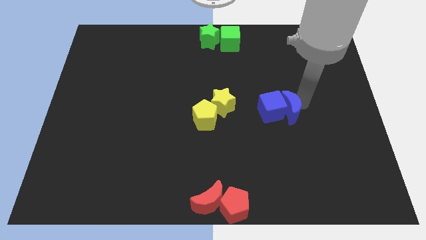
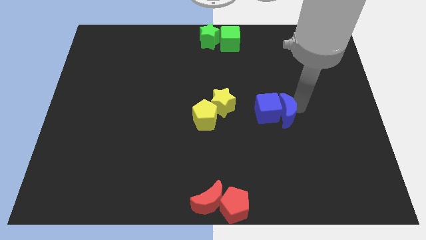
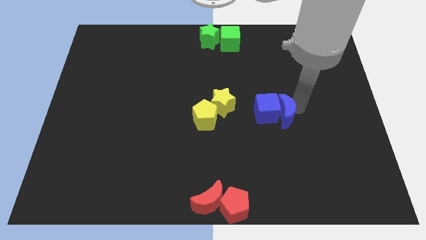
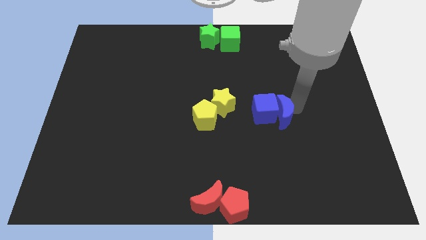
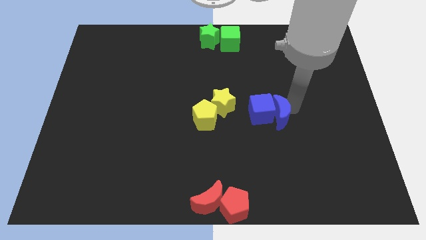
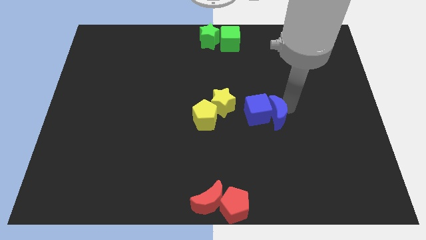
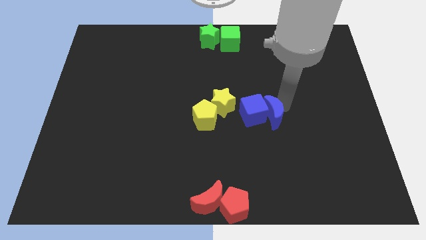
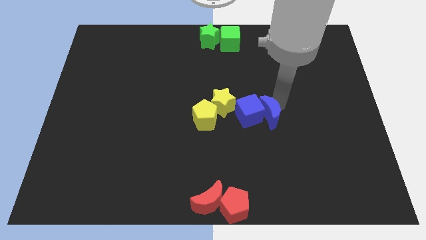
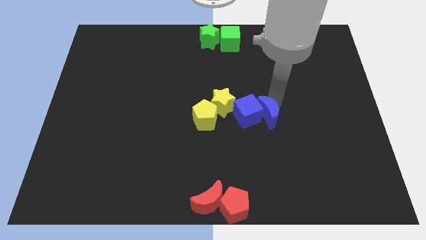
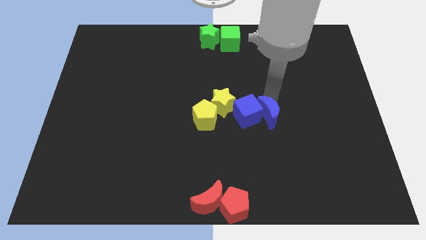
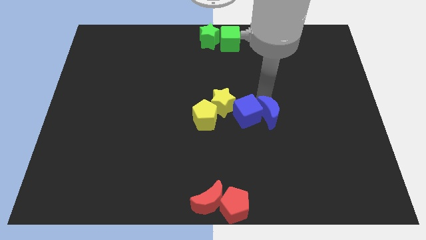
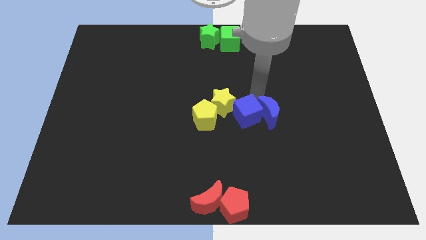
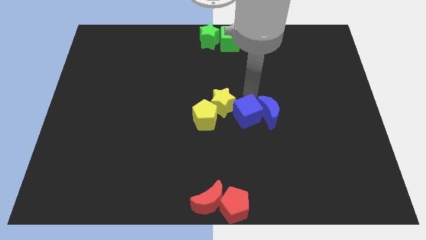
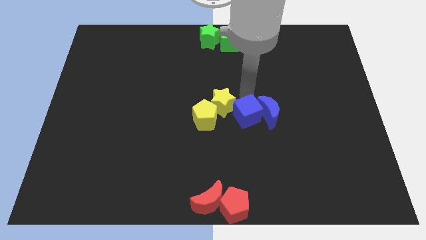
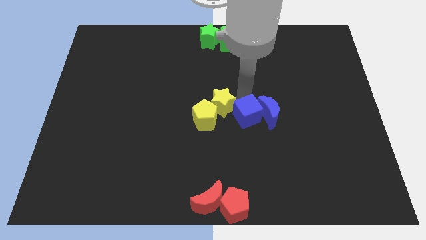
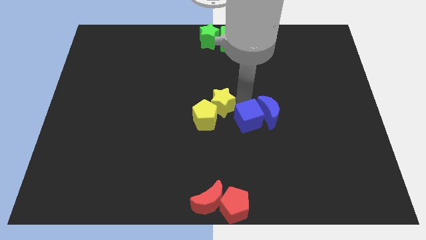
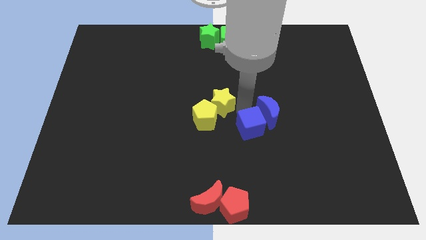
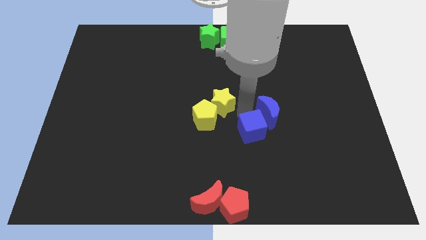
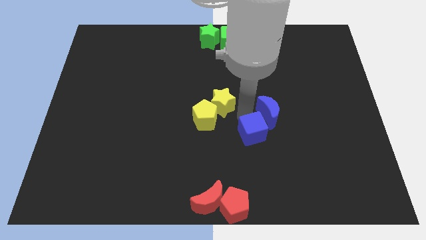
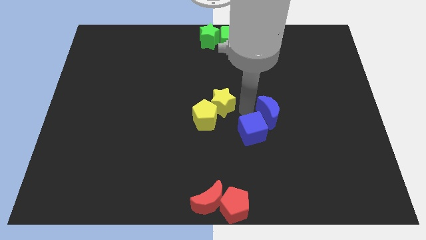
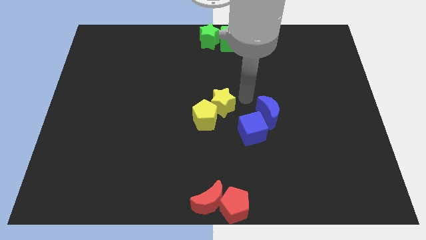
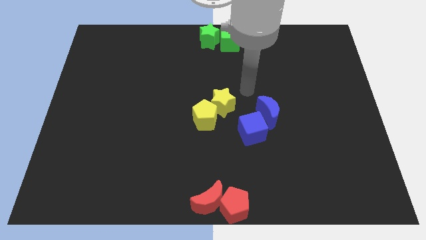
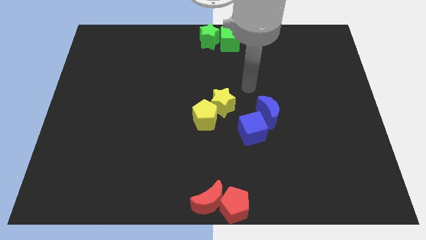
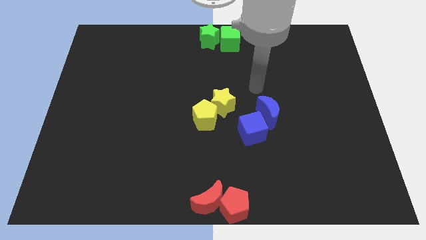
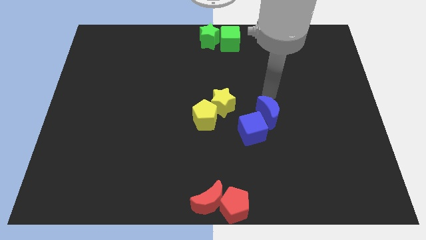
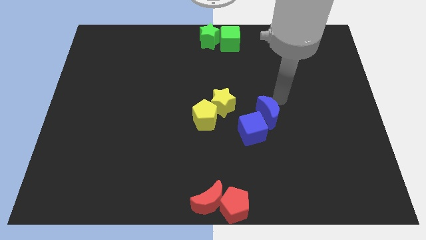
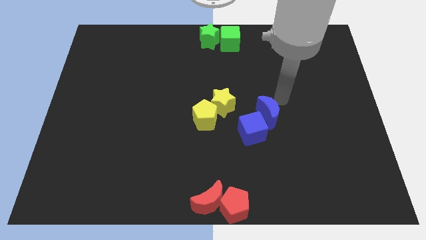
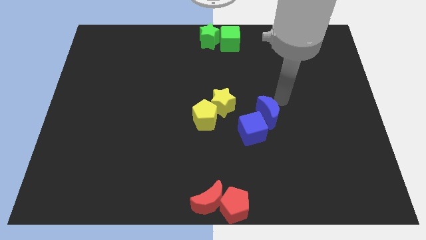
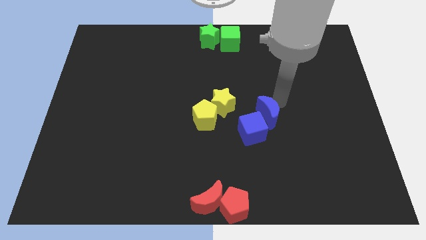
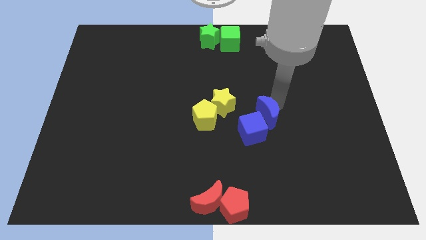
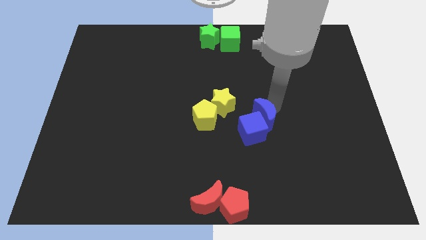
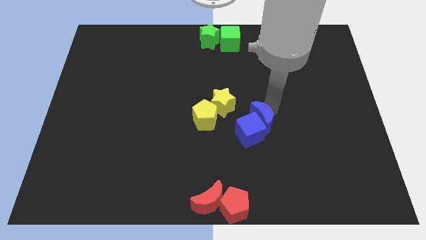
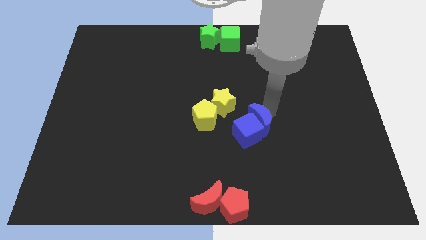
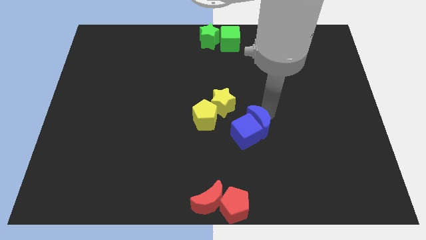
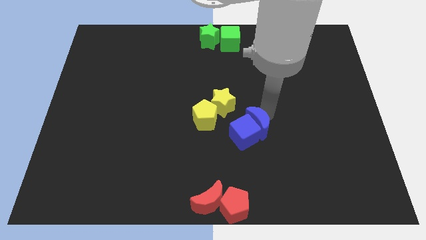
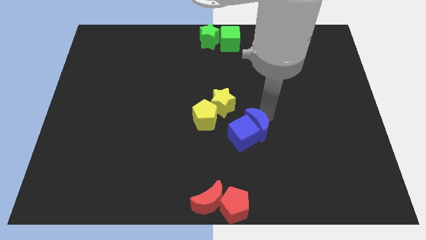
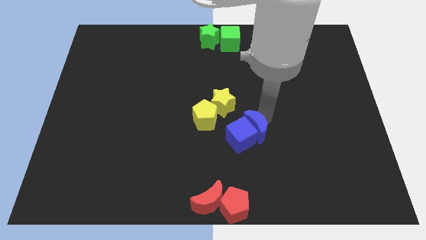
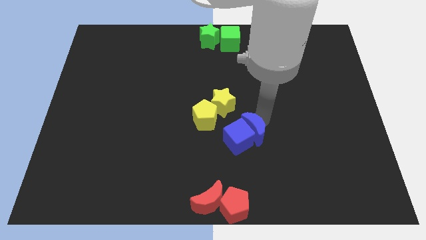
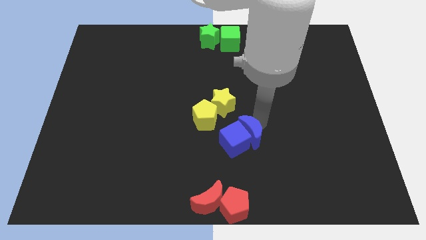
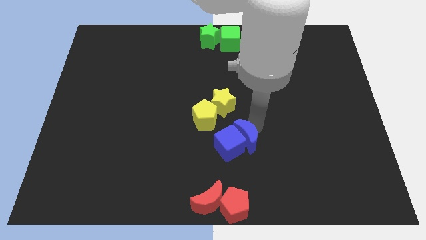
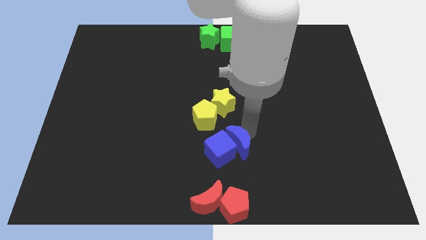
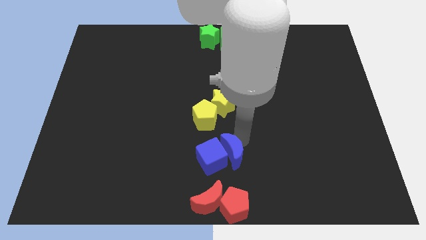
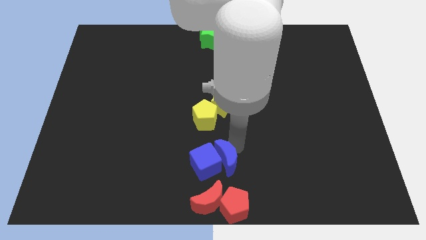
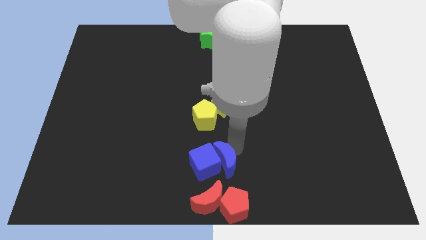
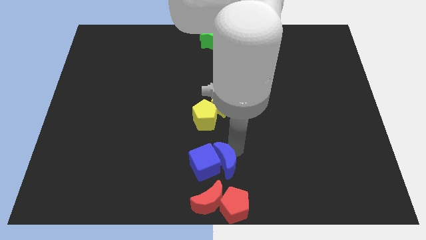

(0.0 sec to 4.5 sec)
move blue blocks above red blocks

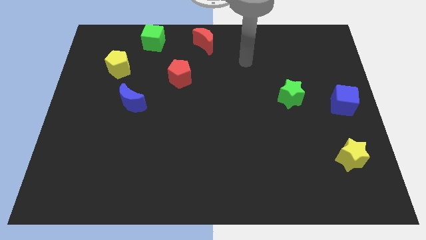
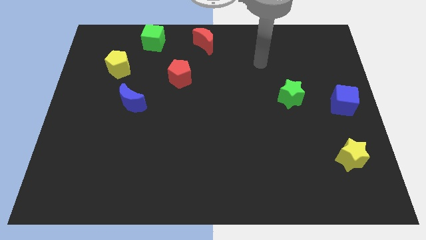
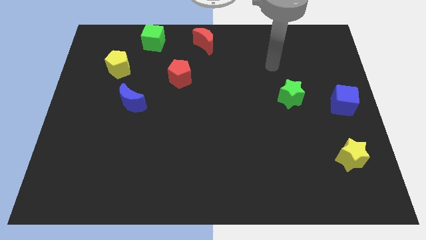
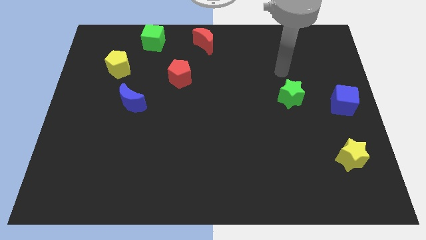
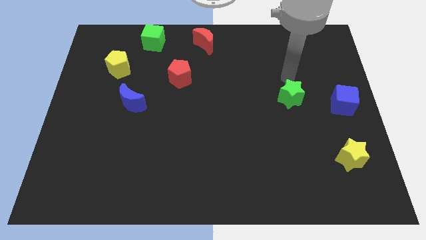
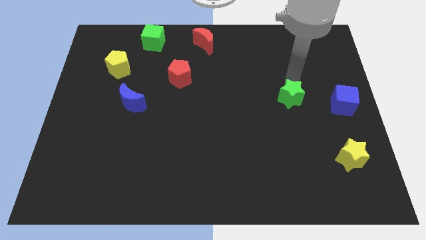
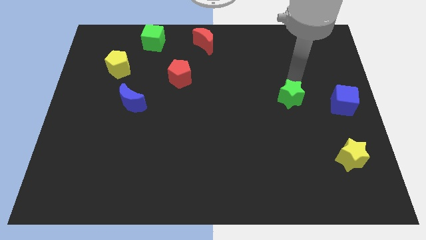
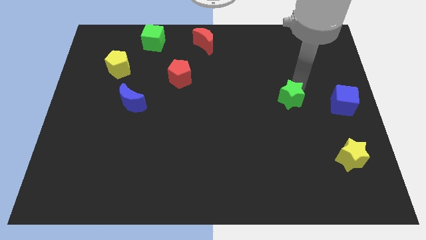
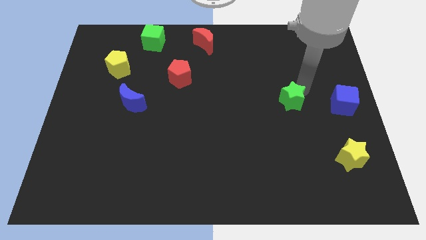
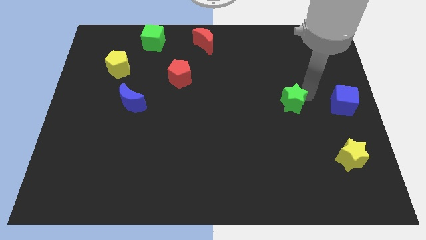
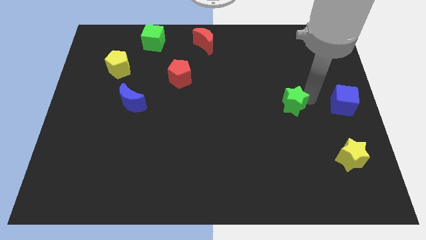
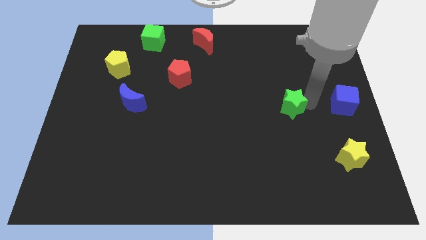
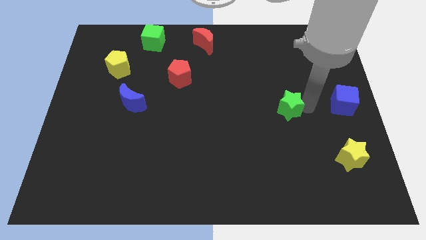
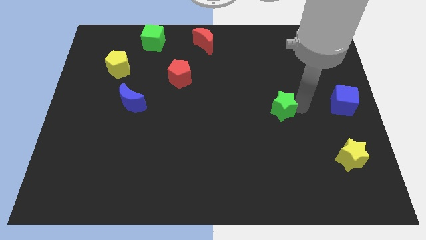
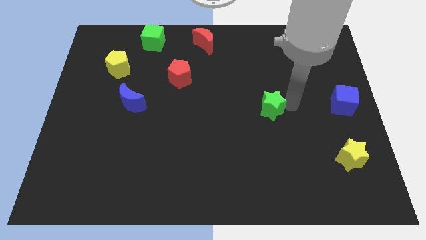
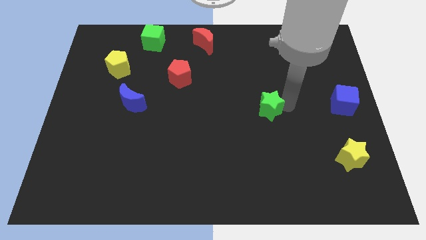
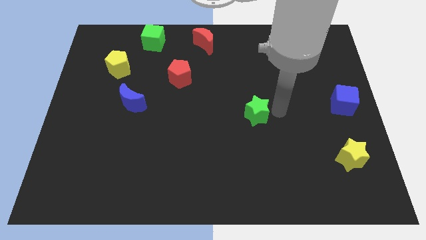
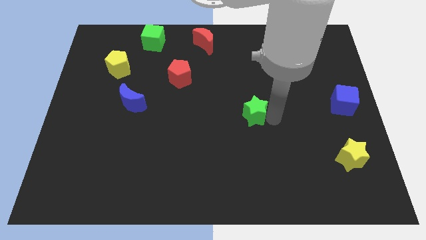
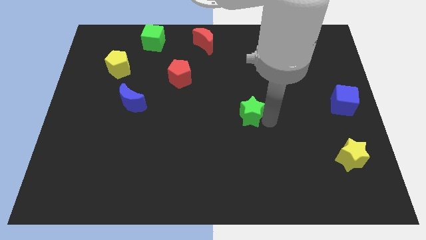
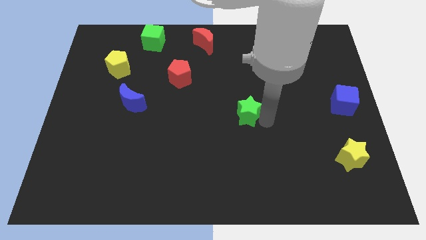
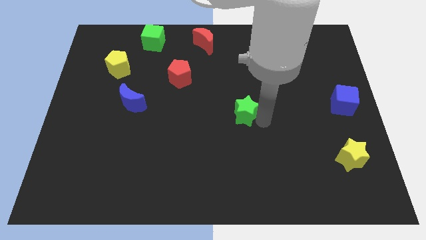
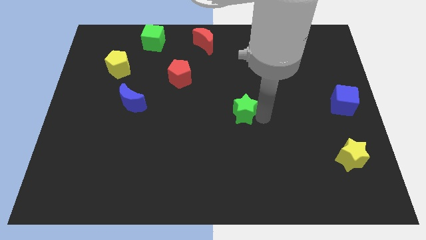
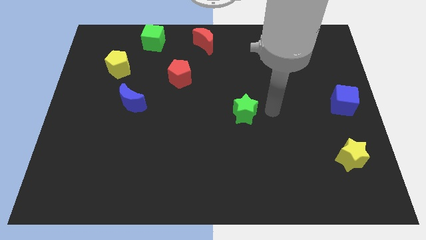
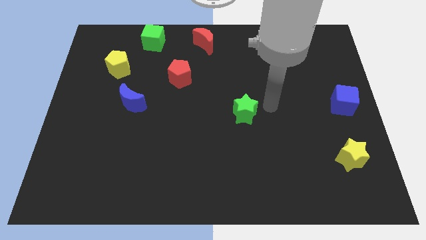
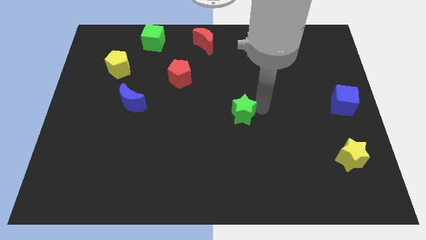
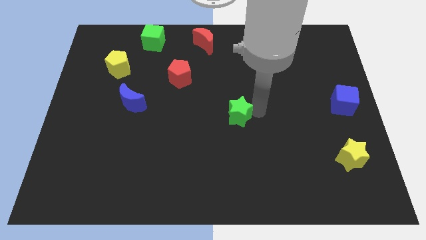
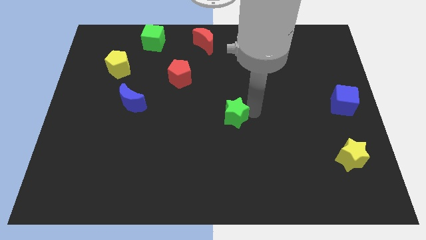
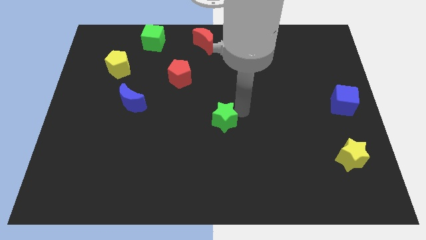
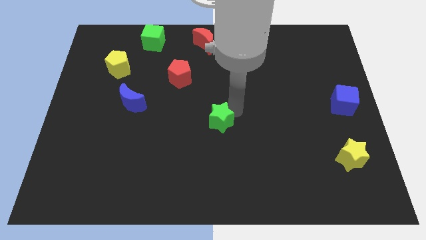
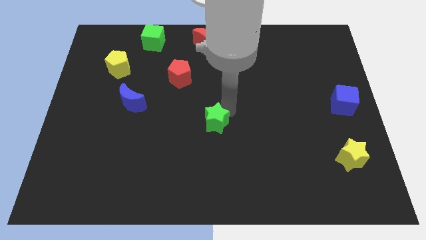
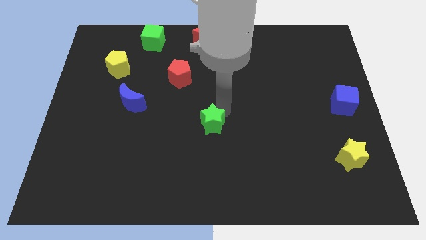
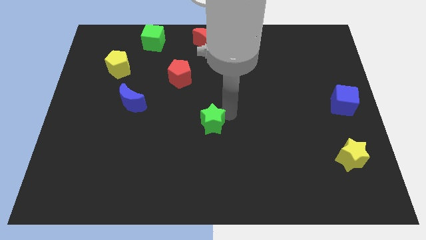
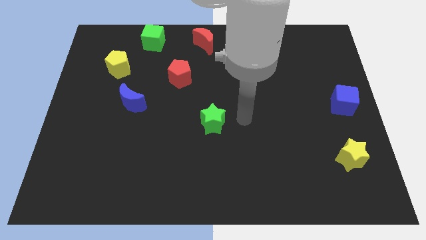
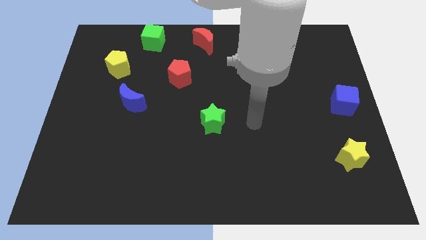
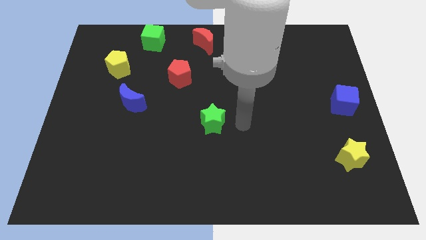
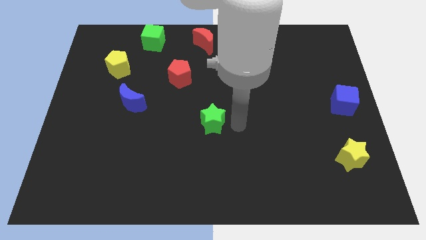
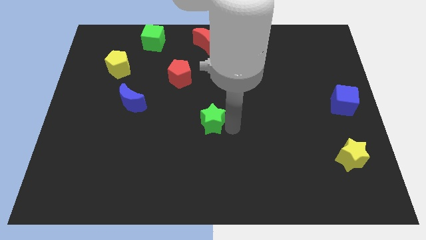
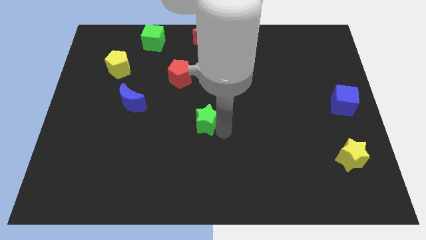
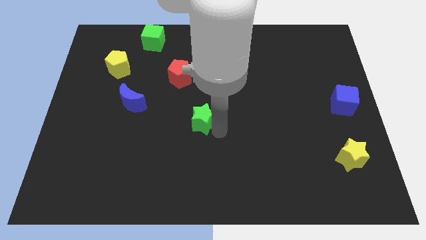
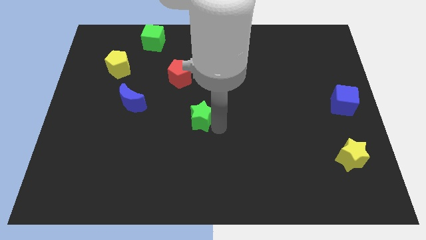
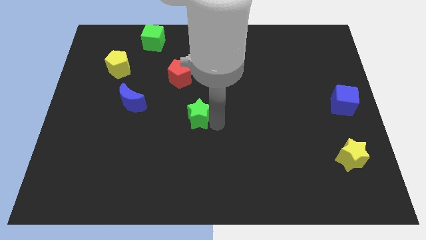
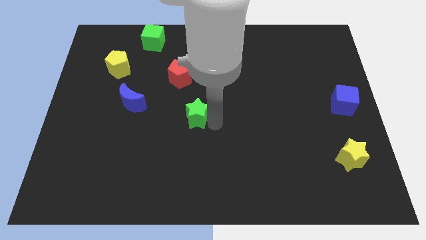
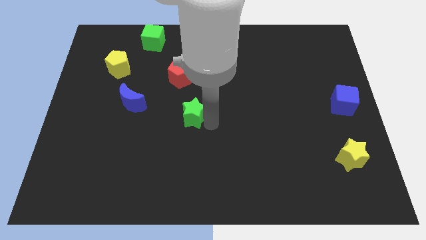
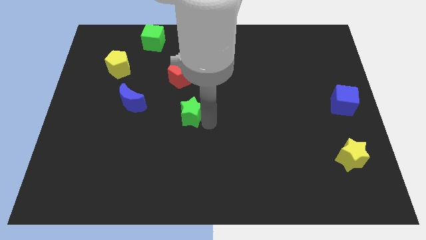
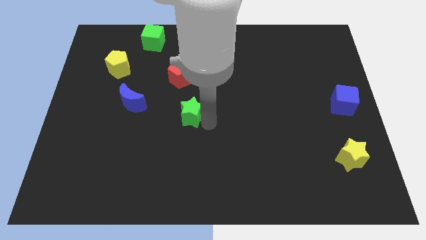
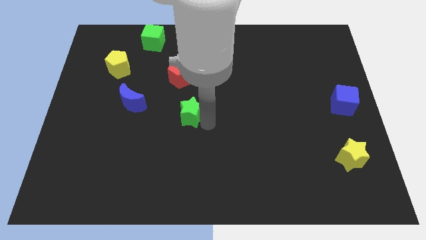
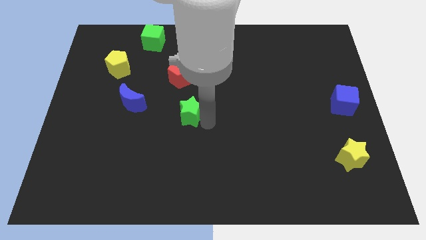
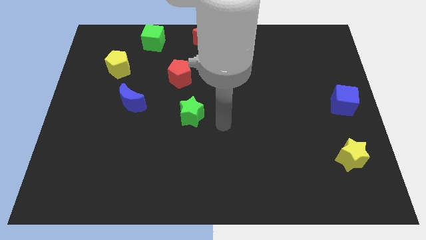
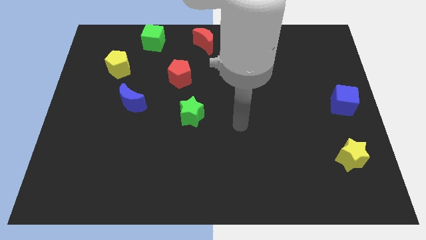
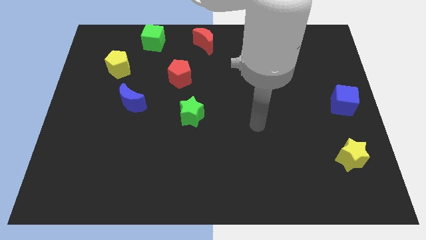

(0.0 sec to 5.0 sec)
move the green star at the bottom side of the red pentagon
